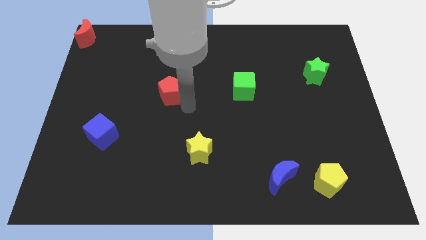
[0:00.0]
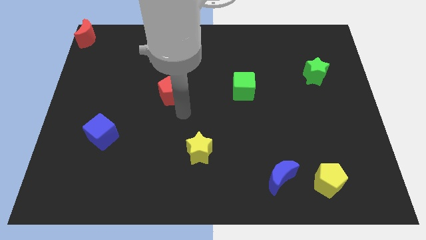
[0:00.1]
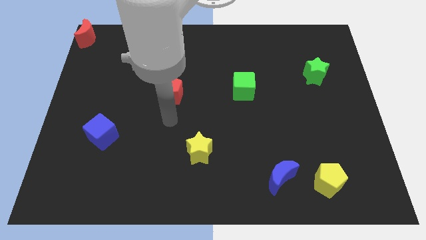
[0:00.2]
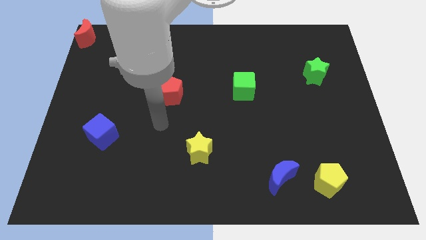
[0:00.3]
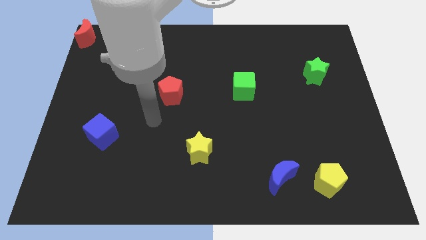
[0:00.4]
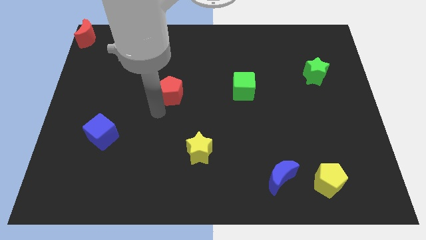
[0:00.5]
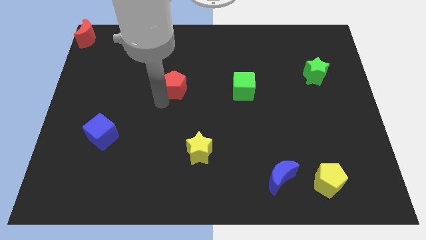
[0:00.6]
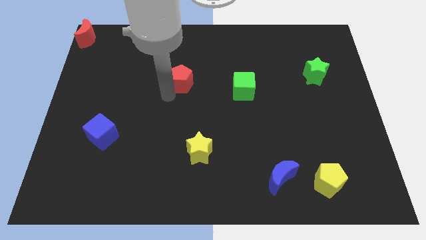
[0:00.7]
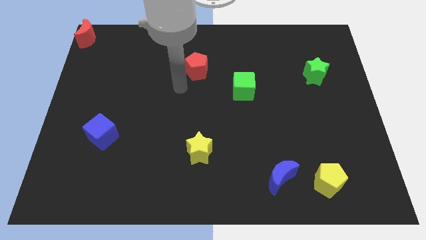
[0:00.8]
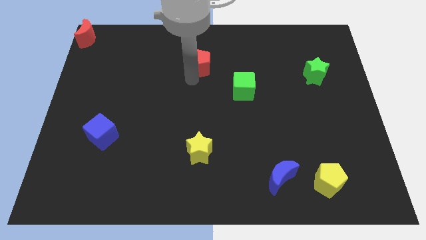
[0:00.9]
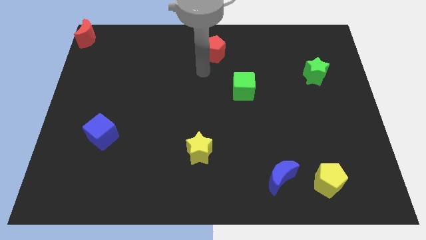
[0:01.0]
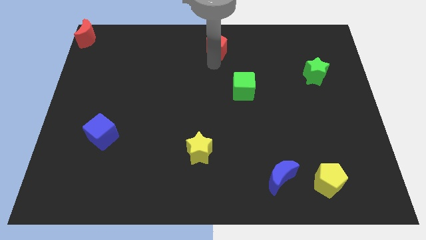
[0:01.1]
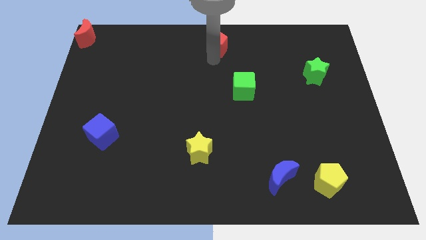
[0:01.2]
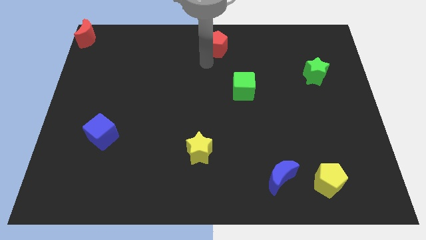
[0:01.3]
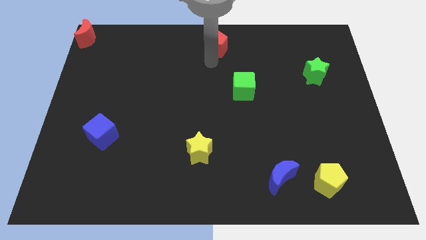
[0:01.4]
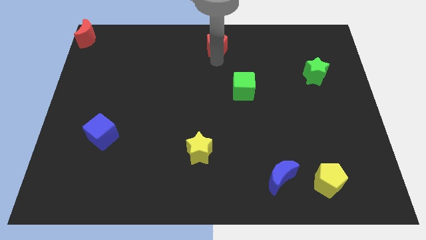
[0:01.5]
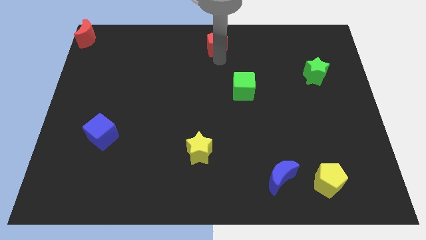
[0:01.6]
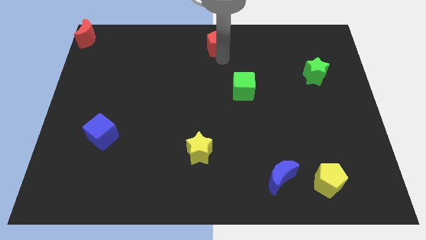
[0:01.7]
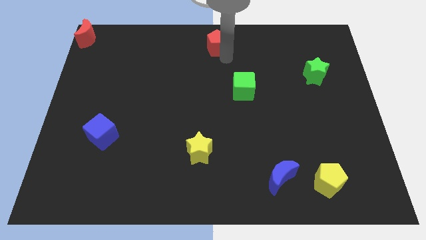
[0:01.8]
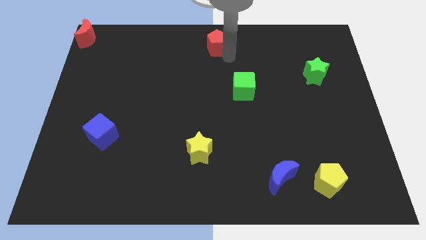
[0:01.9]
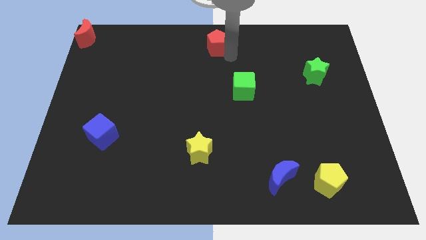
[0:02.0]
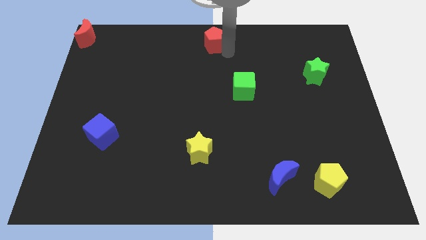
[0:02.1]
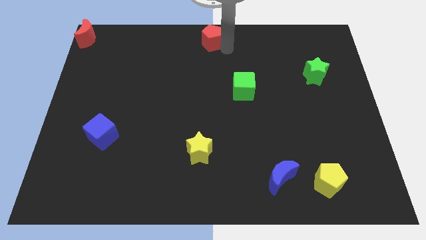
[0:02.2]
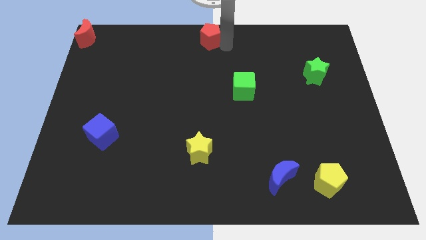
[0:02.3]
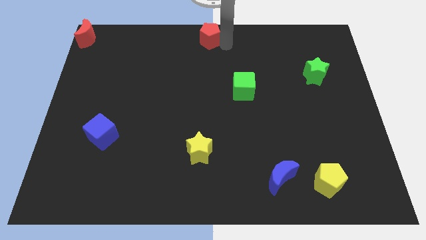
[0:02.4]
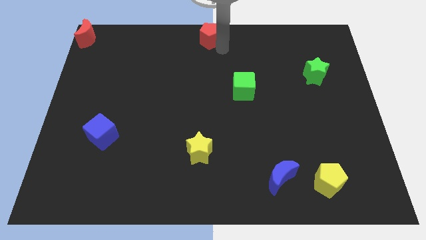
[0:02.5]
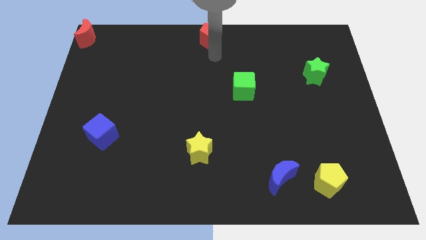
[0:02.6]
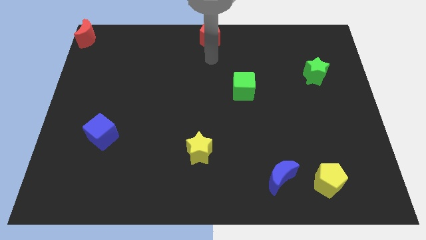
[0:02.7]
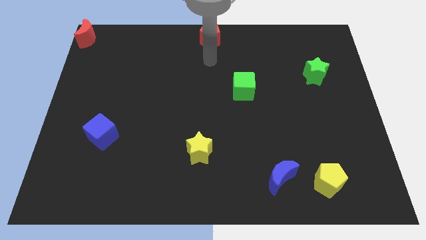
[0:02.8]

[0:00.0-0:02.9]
push the red pentagon to the top center

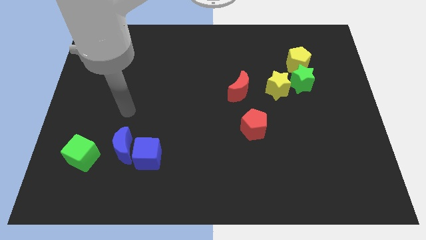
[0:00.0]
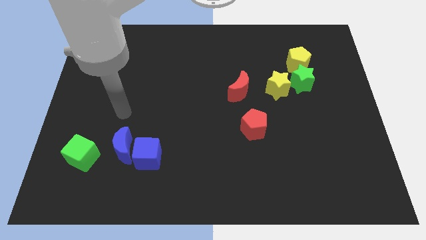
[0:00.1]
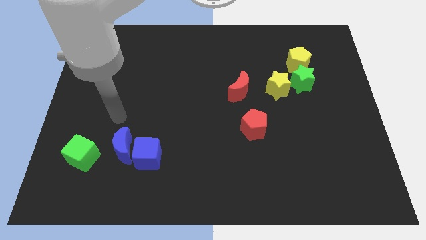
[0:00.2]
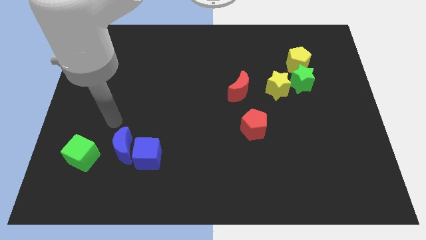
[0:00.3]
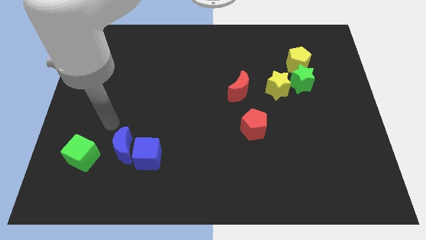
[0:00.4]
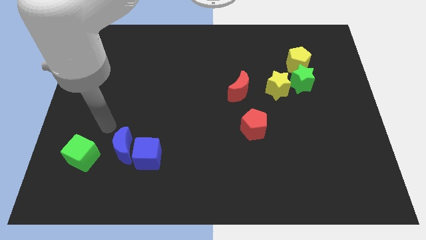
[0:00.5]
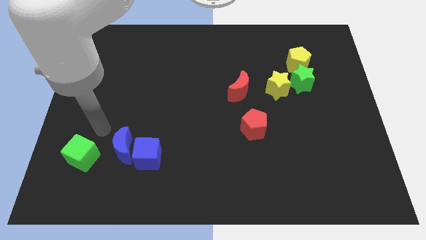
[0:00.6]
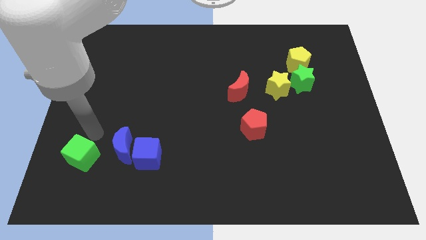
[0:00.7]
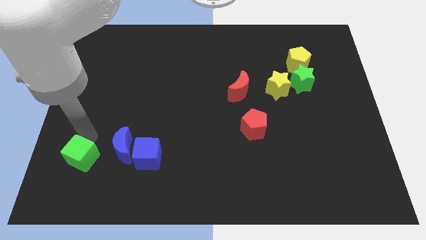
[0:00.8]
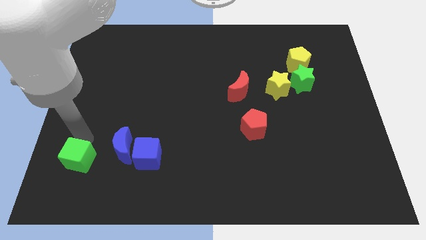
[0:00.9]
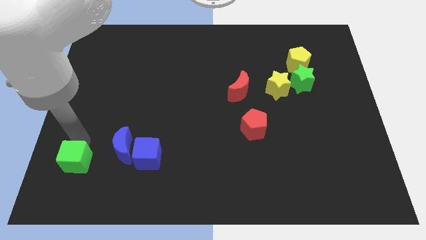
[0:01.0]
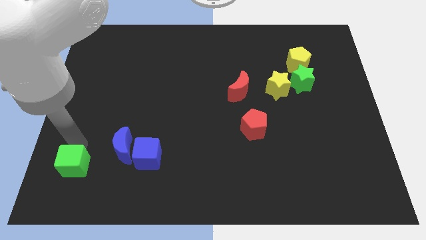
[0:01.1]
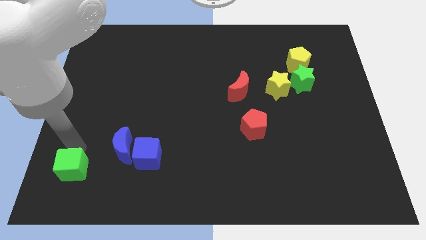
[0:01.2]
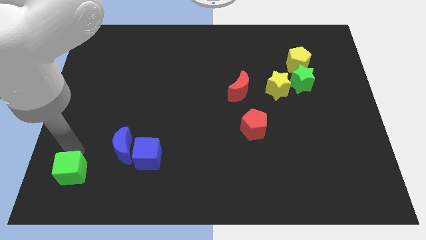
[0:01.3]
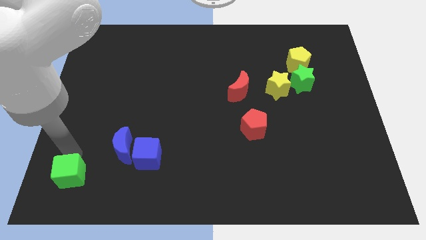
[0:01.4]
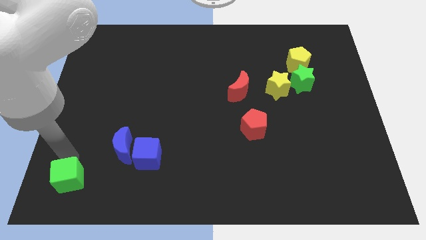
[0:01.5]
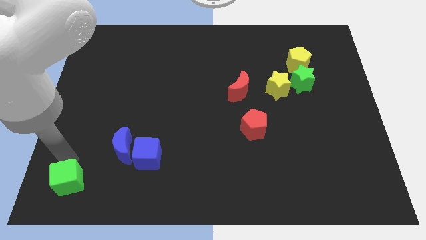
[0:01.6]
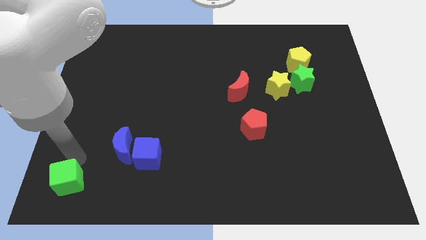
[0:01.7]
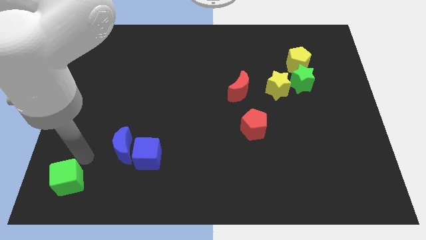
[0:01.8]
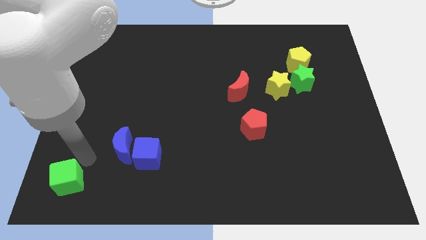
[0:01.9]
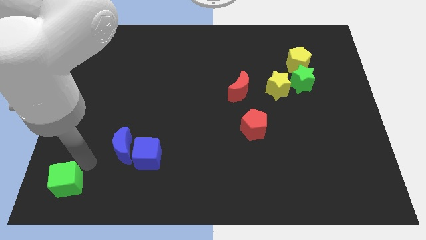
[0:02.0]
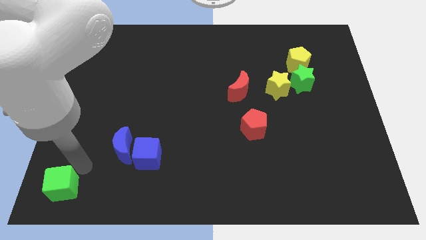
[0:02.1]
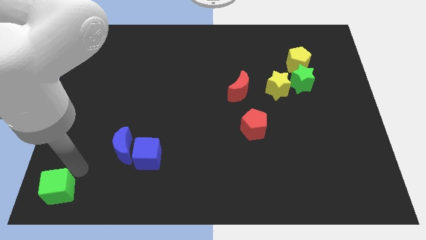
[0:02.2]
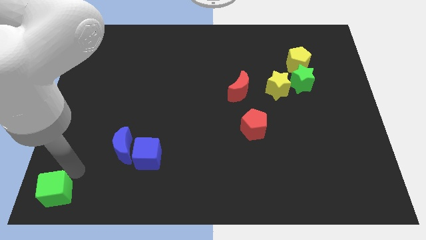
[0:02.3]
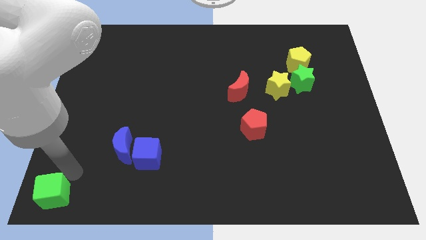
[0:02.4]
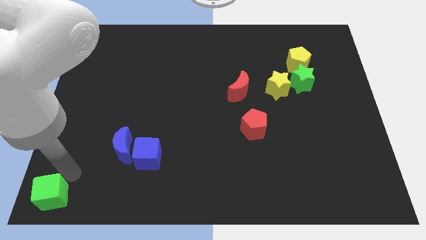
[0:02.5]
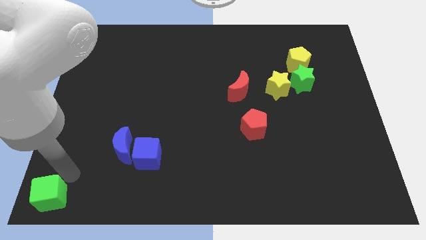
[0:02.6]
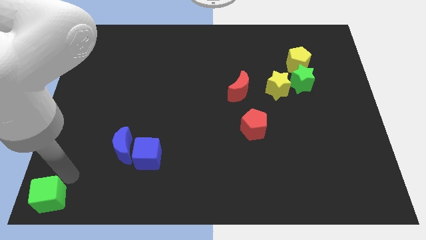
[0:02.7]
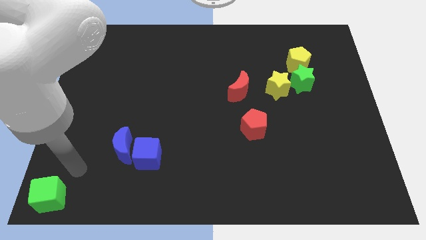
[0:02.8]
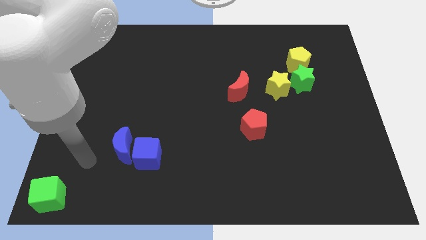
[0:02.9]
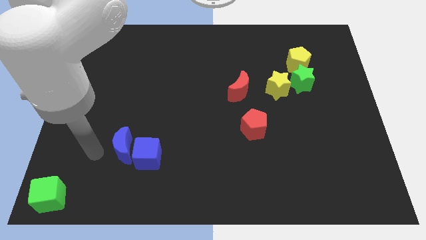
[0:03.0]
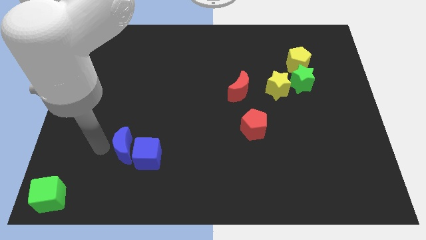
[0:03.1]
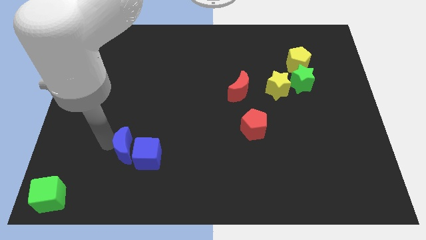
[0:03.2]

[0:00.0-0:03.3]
move the green cube to the bottom left

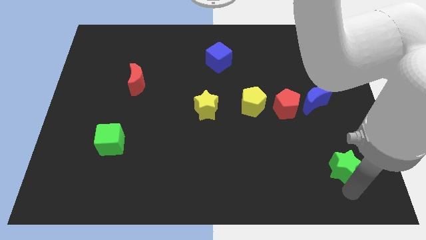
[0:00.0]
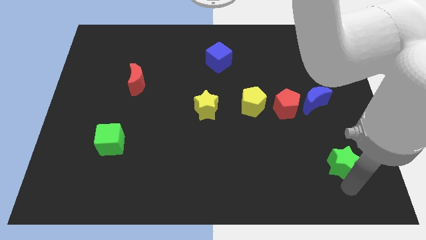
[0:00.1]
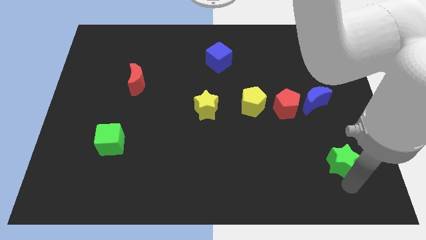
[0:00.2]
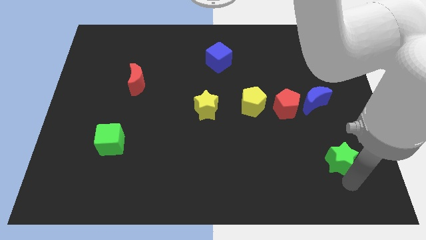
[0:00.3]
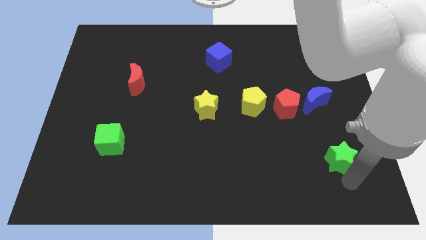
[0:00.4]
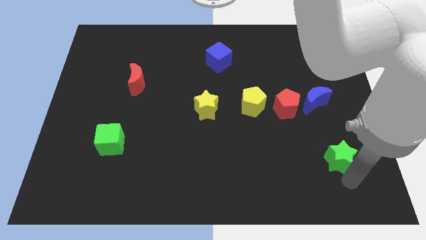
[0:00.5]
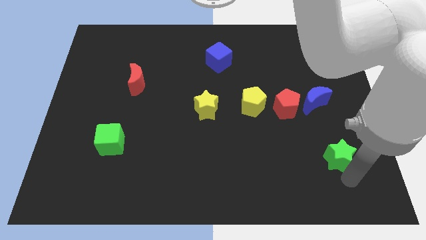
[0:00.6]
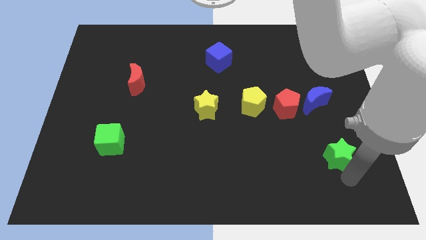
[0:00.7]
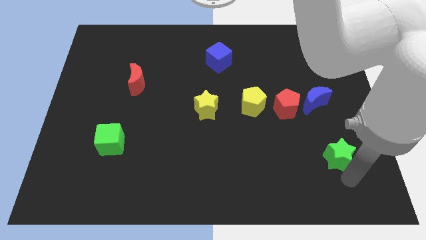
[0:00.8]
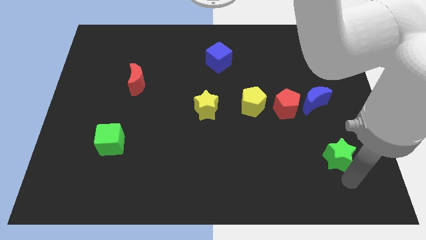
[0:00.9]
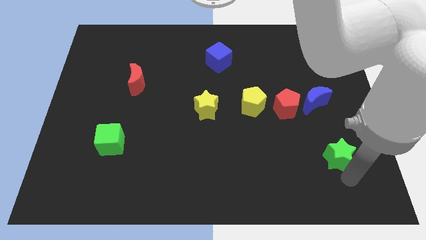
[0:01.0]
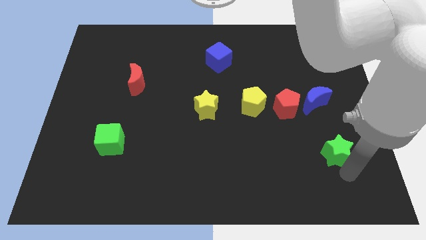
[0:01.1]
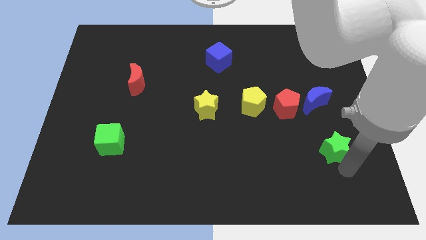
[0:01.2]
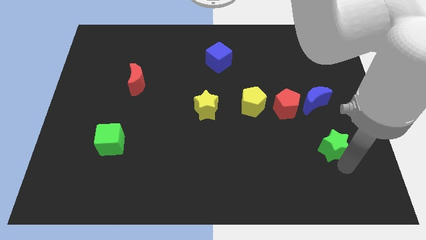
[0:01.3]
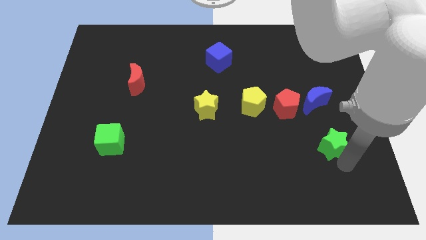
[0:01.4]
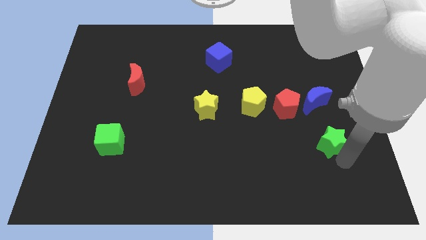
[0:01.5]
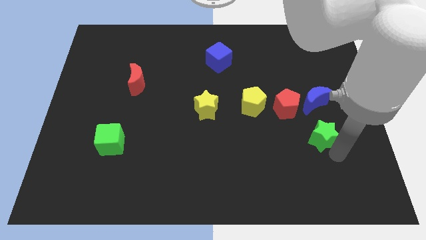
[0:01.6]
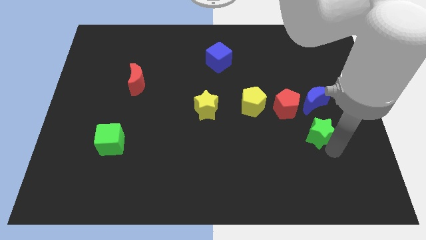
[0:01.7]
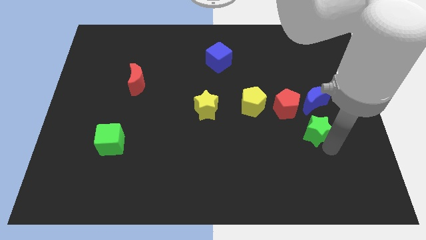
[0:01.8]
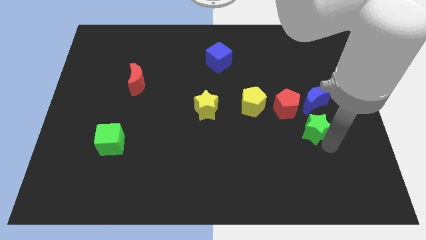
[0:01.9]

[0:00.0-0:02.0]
move the green star below the blue moon

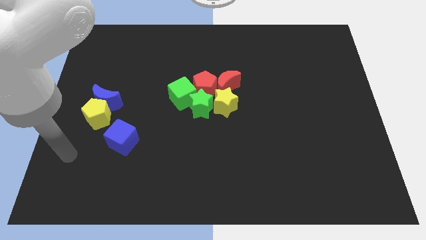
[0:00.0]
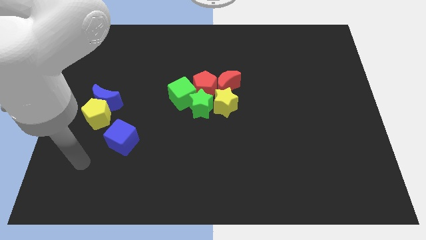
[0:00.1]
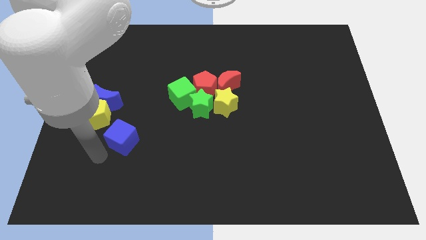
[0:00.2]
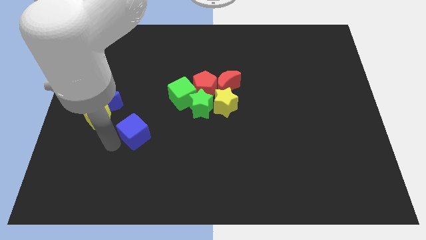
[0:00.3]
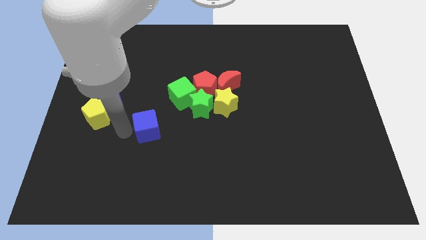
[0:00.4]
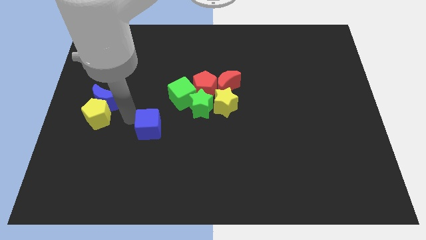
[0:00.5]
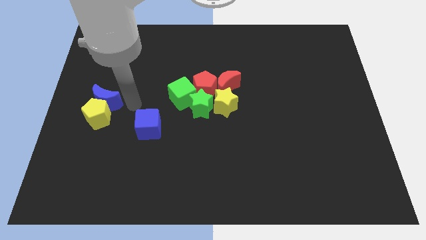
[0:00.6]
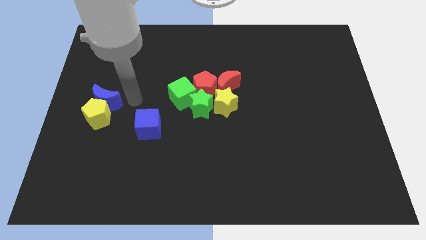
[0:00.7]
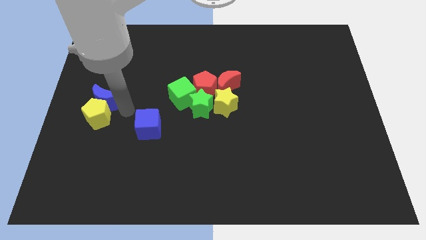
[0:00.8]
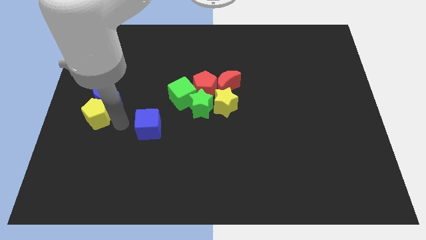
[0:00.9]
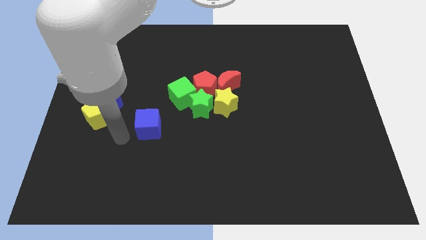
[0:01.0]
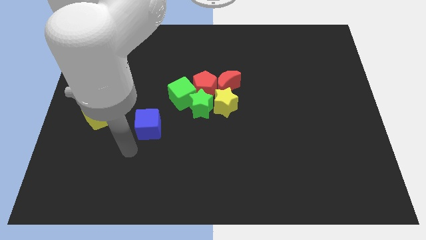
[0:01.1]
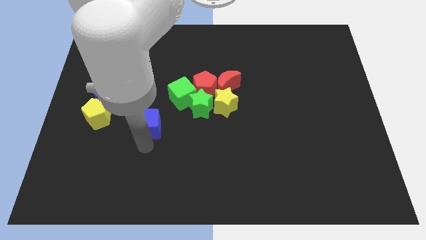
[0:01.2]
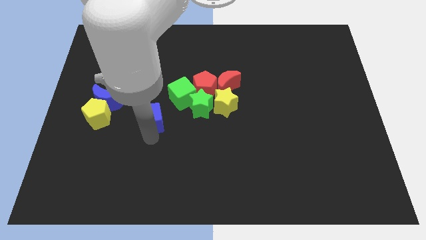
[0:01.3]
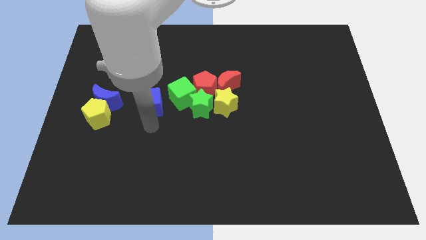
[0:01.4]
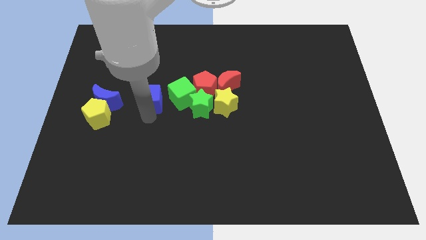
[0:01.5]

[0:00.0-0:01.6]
move the blue cube to the left of the green cube
